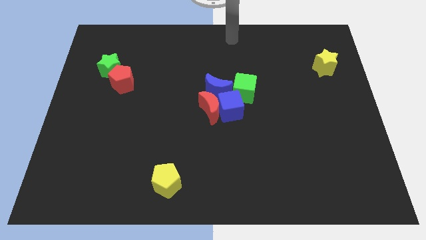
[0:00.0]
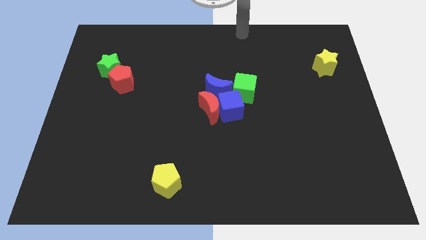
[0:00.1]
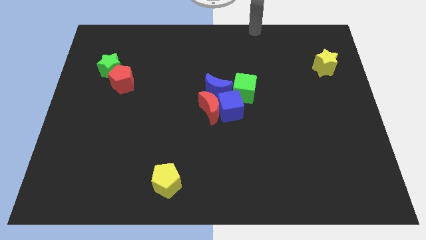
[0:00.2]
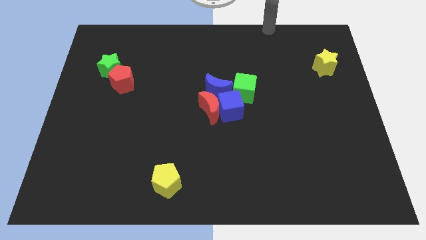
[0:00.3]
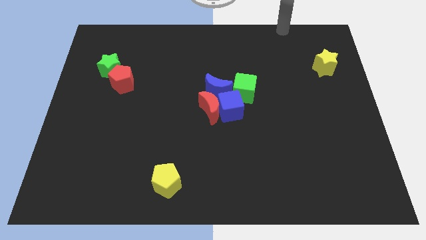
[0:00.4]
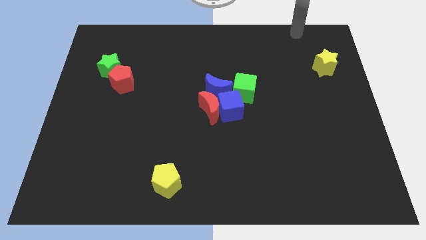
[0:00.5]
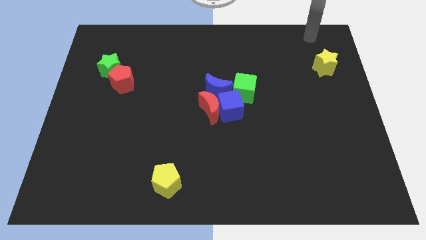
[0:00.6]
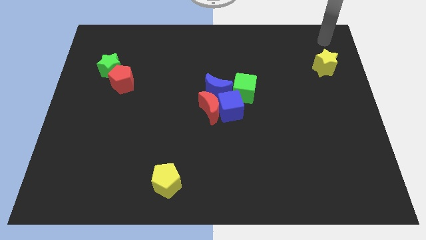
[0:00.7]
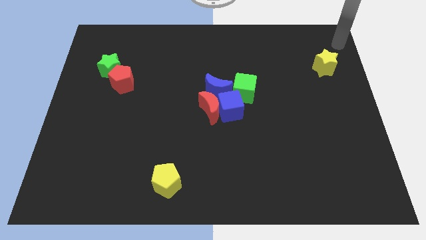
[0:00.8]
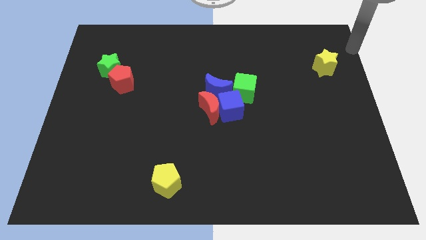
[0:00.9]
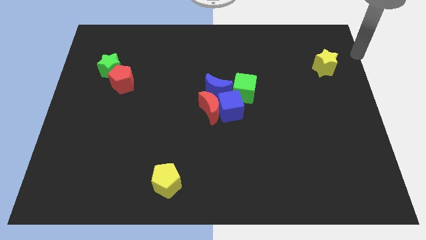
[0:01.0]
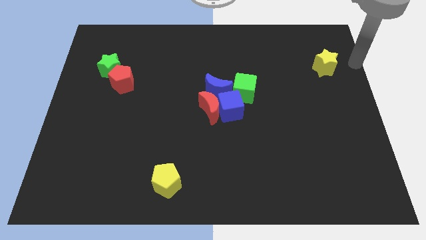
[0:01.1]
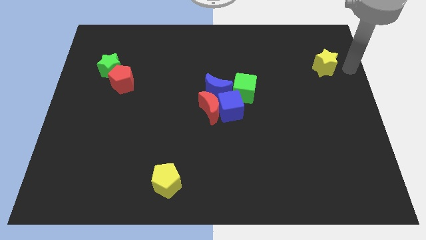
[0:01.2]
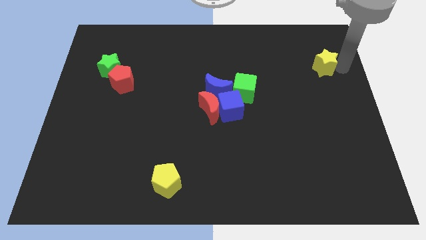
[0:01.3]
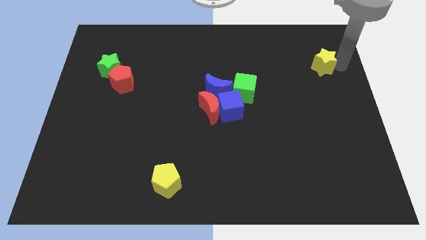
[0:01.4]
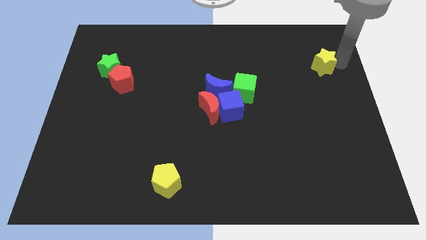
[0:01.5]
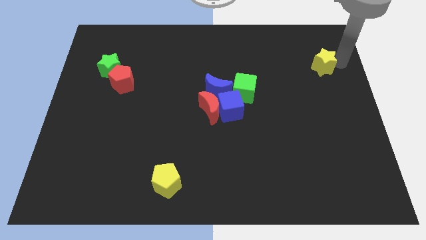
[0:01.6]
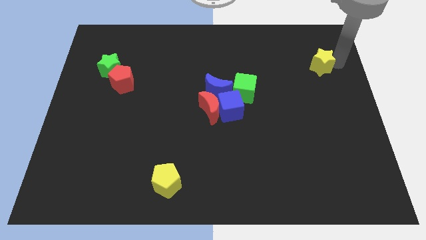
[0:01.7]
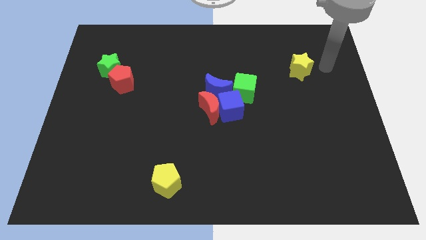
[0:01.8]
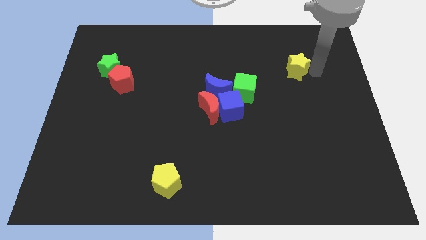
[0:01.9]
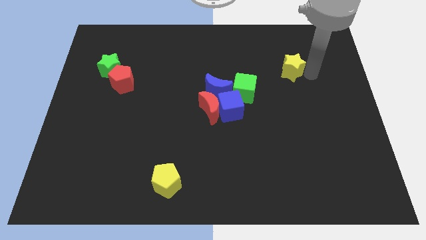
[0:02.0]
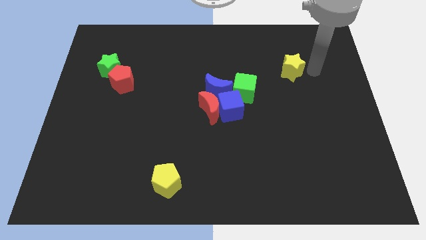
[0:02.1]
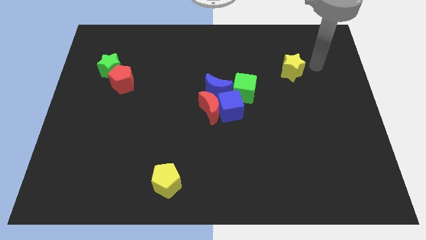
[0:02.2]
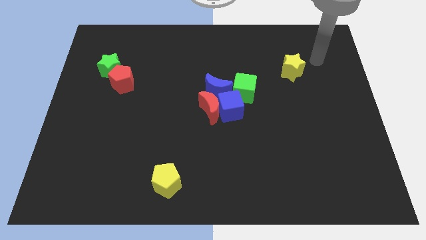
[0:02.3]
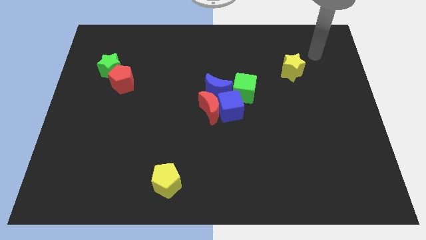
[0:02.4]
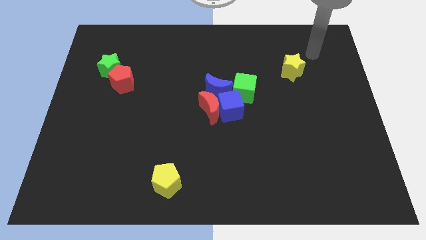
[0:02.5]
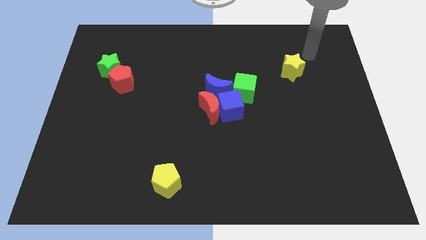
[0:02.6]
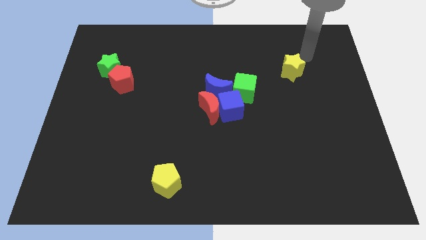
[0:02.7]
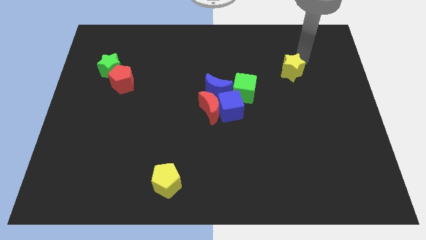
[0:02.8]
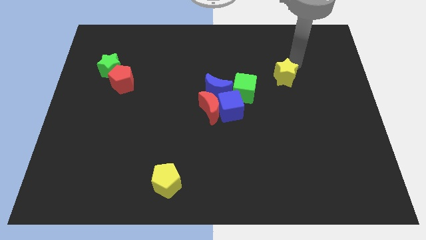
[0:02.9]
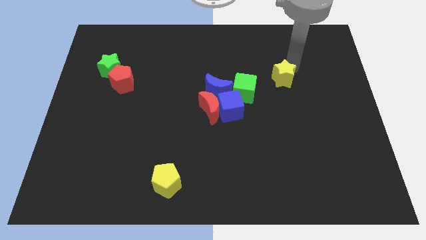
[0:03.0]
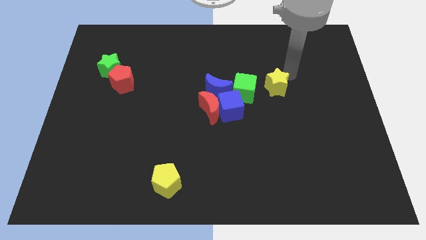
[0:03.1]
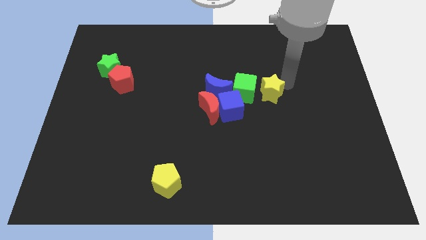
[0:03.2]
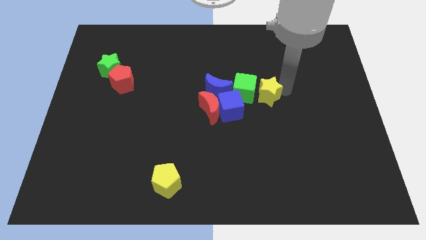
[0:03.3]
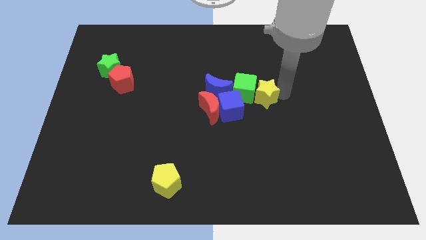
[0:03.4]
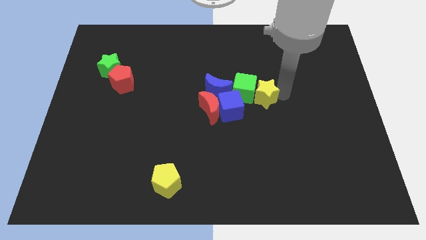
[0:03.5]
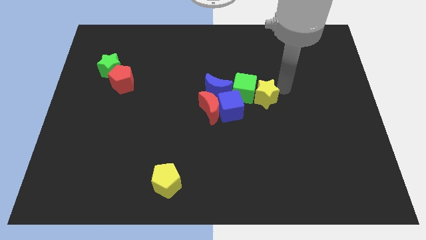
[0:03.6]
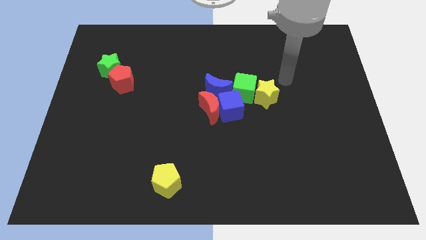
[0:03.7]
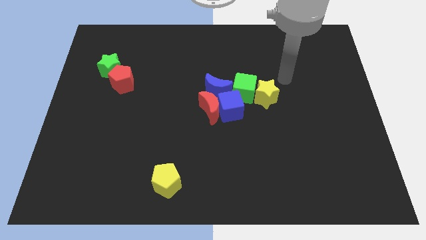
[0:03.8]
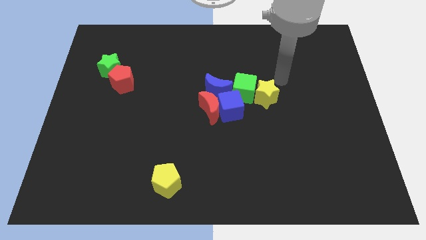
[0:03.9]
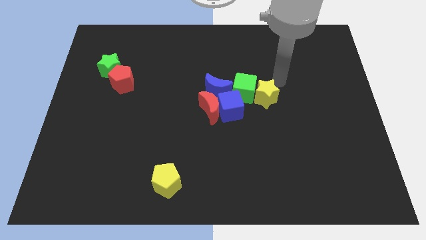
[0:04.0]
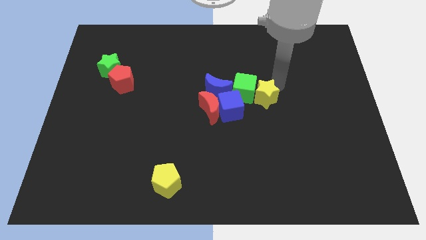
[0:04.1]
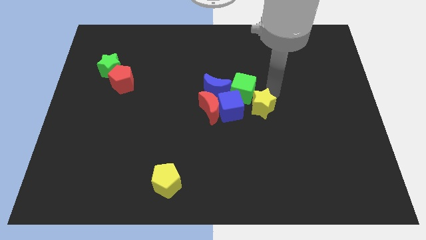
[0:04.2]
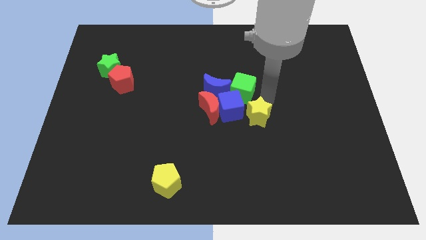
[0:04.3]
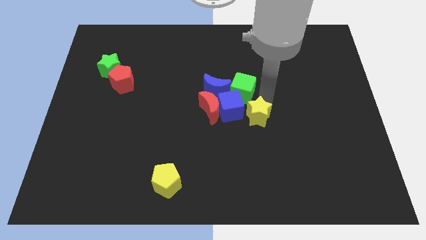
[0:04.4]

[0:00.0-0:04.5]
place the yellow star to the right of the blue cube

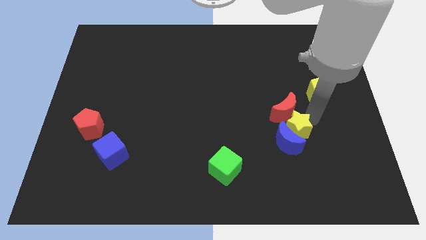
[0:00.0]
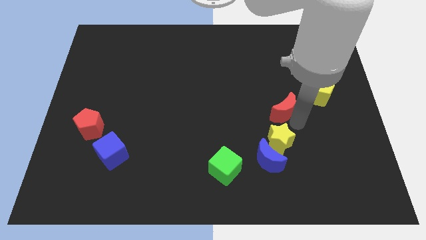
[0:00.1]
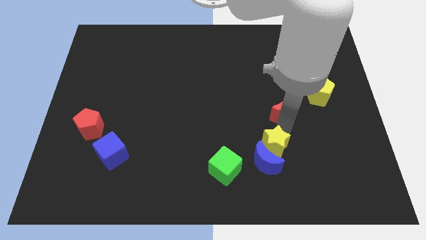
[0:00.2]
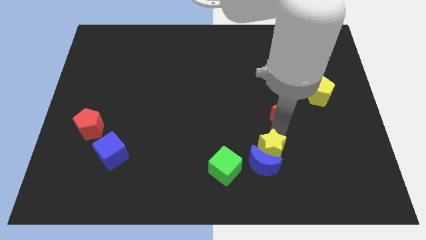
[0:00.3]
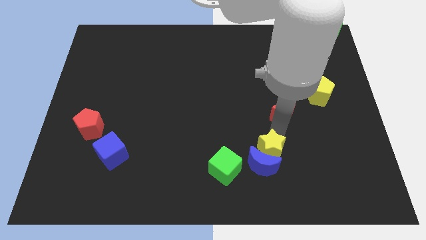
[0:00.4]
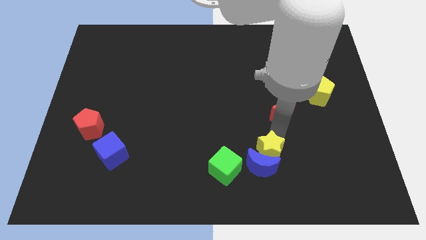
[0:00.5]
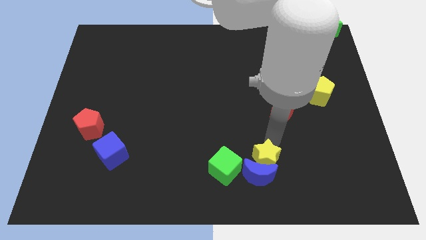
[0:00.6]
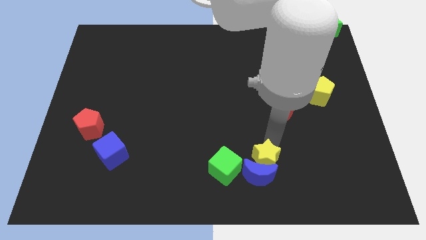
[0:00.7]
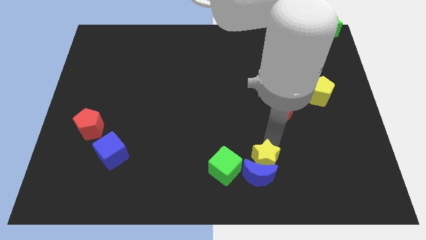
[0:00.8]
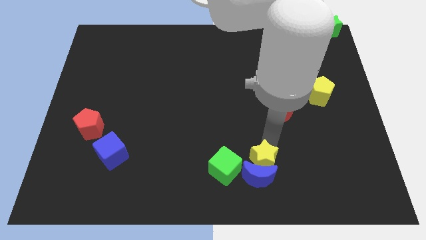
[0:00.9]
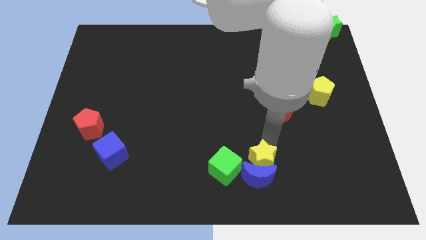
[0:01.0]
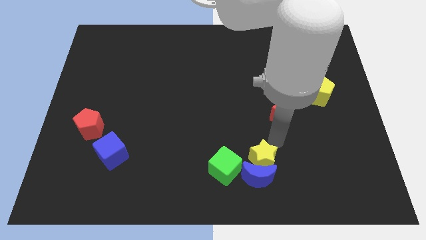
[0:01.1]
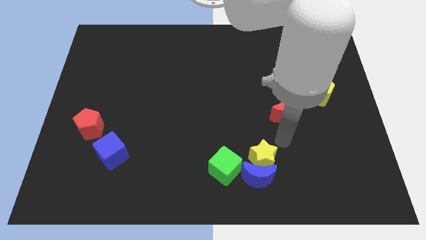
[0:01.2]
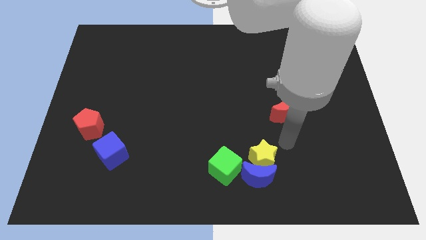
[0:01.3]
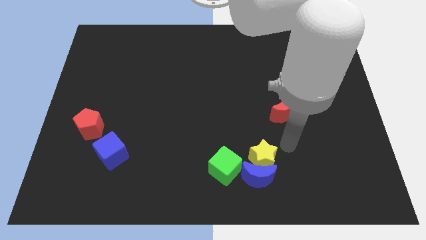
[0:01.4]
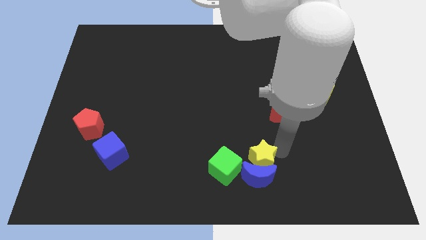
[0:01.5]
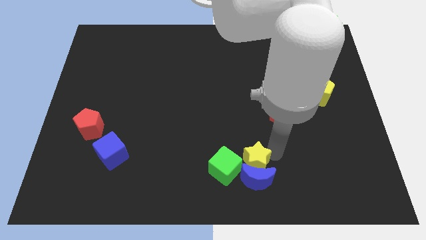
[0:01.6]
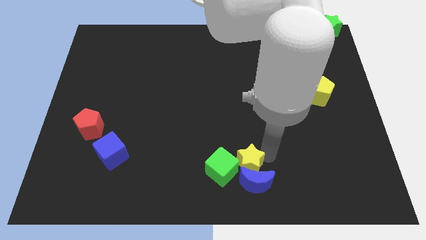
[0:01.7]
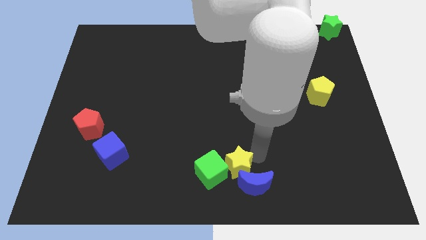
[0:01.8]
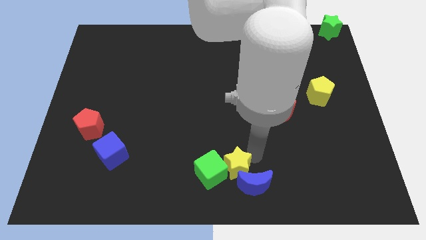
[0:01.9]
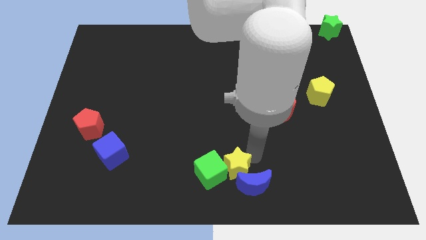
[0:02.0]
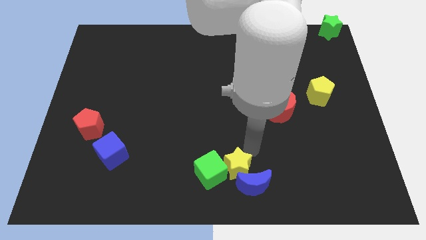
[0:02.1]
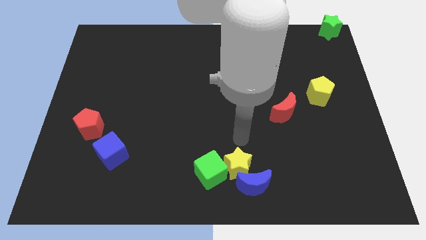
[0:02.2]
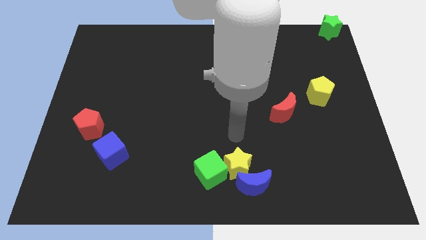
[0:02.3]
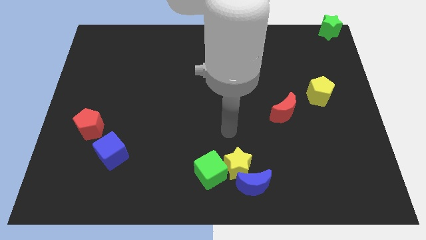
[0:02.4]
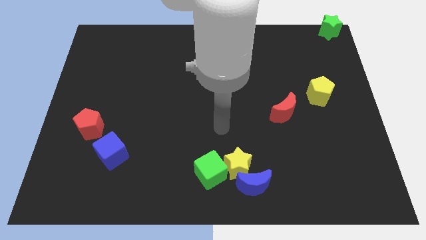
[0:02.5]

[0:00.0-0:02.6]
push the yellow star into the blue moon

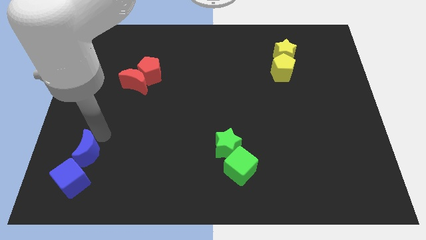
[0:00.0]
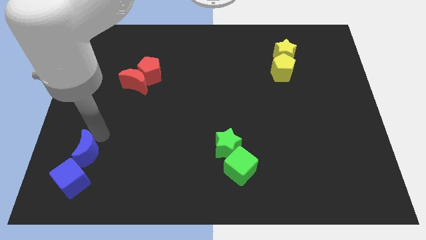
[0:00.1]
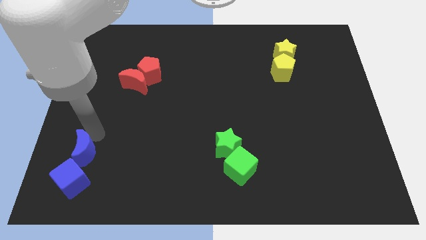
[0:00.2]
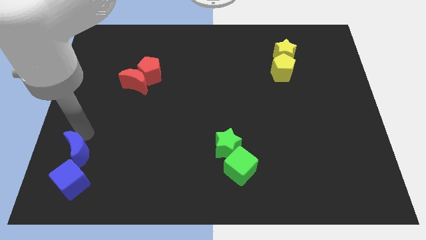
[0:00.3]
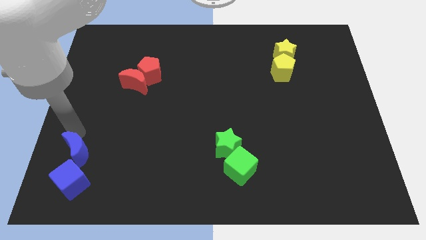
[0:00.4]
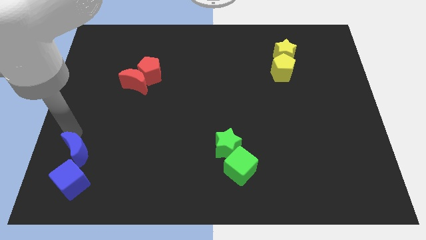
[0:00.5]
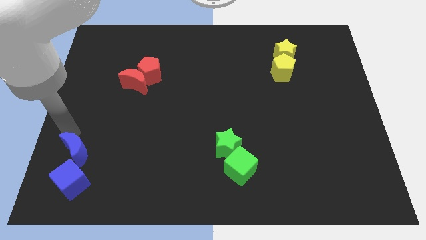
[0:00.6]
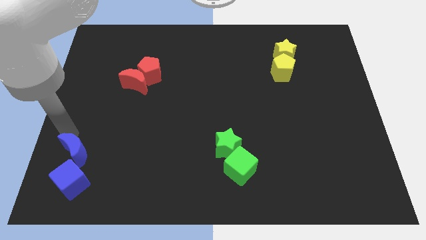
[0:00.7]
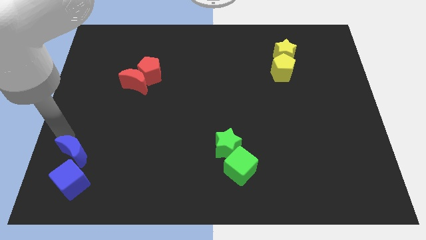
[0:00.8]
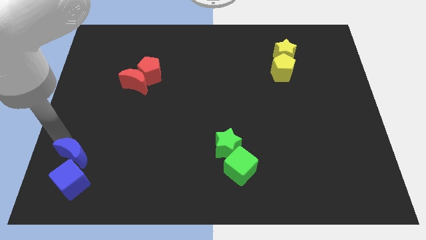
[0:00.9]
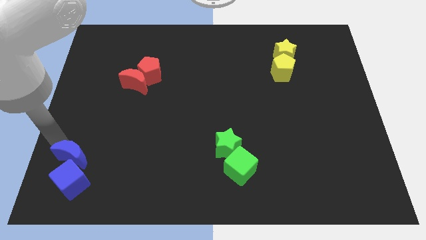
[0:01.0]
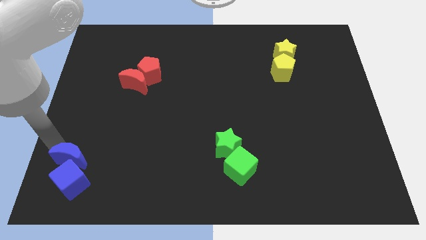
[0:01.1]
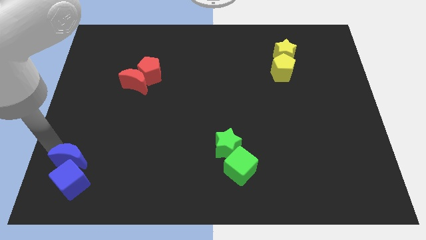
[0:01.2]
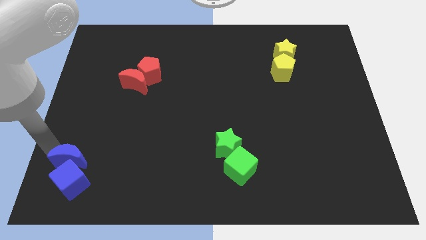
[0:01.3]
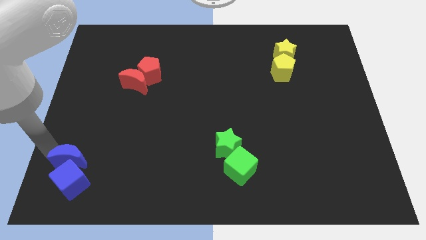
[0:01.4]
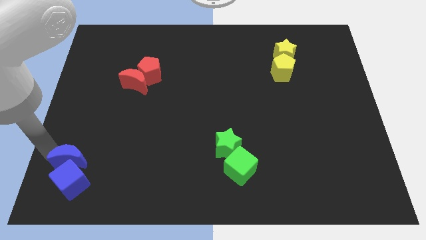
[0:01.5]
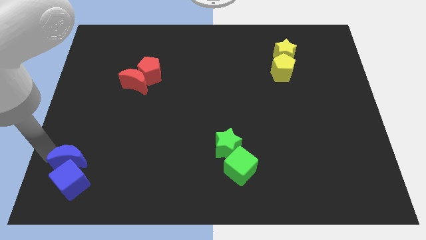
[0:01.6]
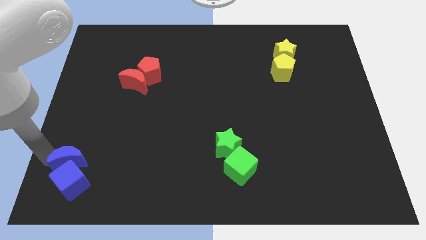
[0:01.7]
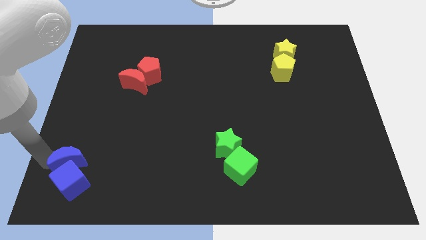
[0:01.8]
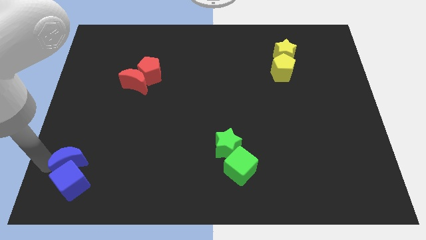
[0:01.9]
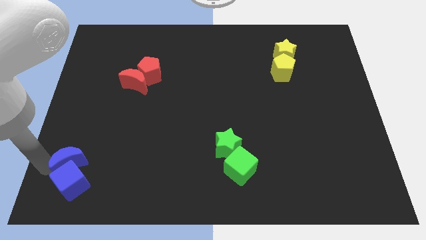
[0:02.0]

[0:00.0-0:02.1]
move the blue crescent to the top of the blue cube
